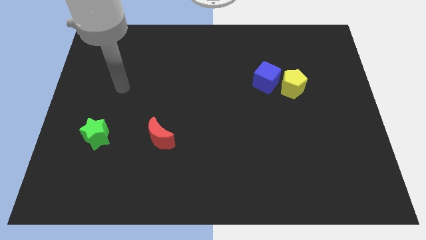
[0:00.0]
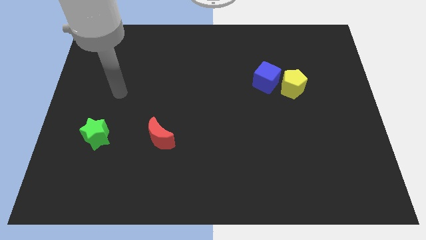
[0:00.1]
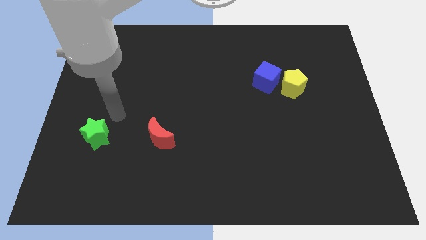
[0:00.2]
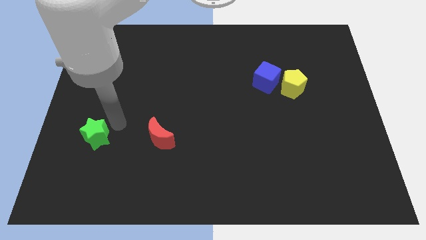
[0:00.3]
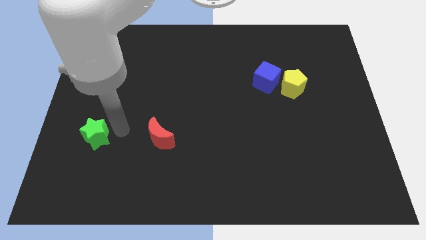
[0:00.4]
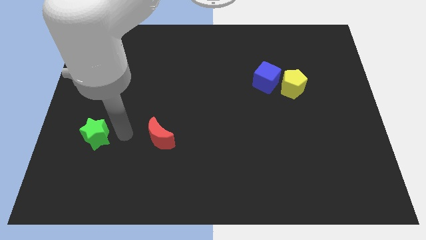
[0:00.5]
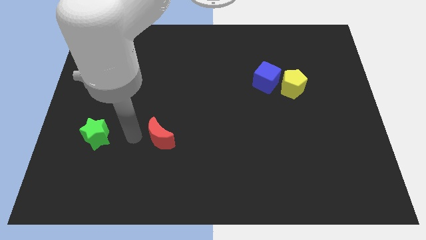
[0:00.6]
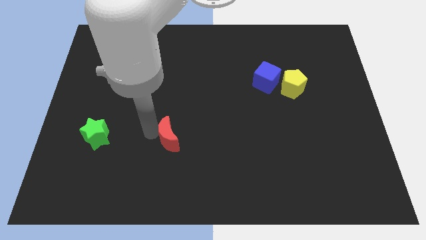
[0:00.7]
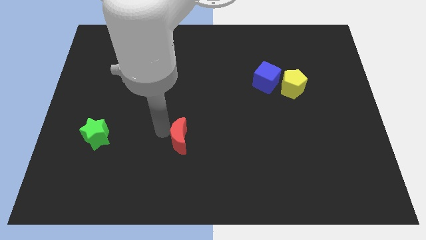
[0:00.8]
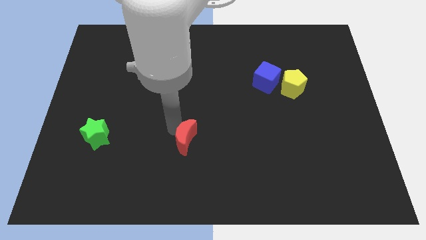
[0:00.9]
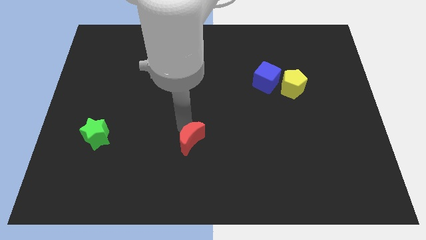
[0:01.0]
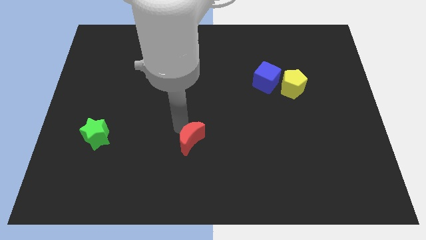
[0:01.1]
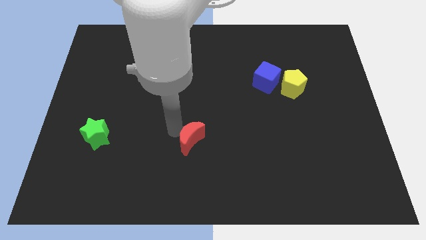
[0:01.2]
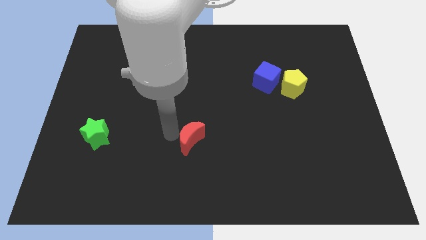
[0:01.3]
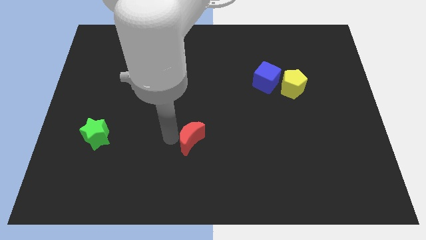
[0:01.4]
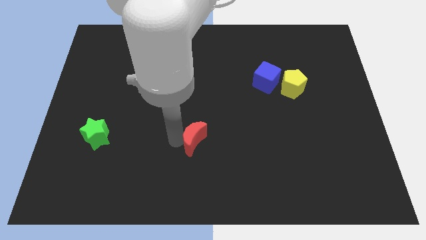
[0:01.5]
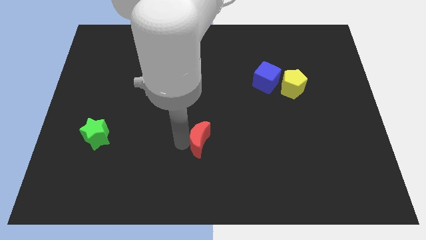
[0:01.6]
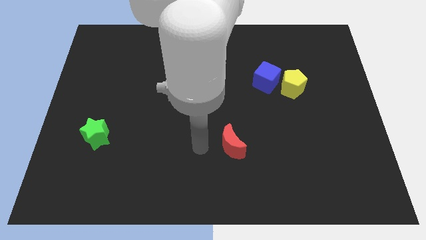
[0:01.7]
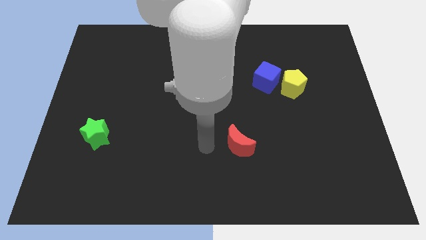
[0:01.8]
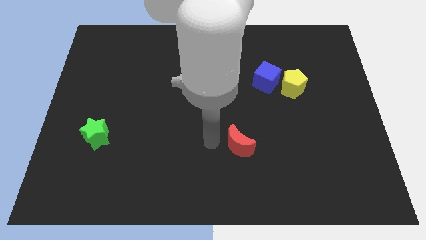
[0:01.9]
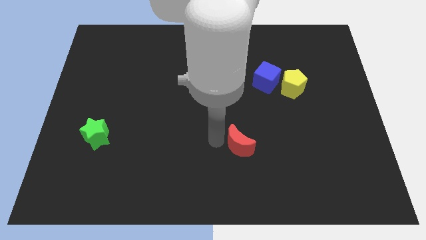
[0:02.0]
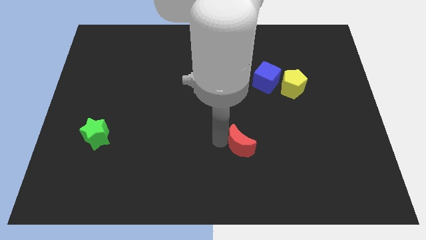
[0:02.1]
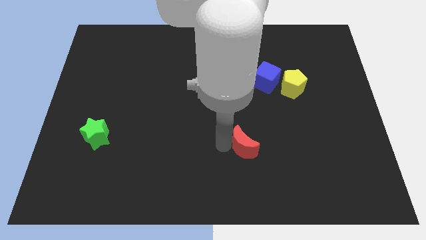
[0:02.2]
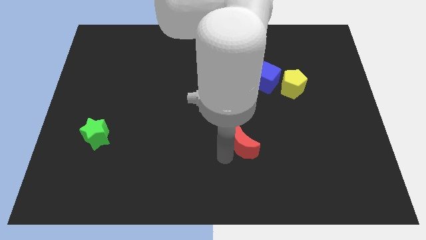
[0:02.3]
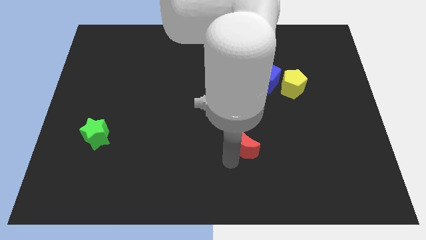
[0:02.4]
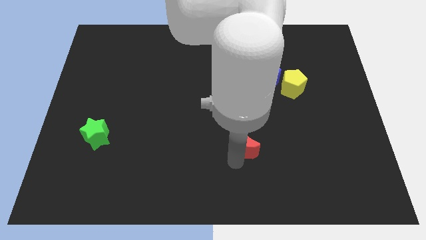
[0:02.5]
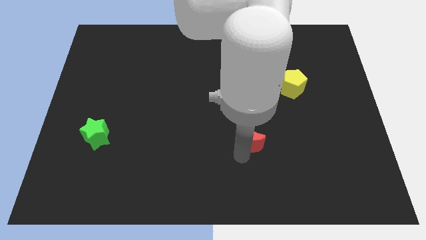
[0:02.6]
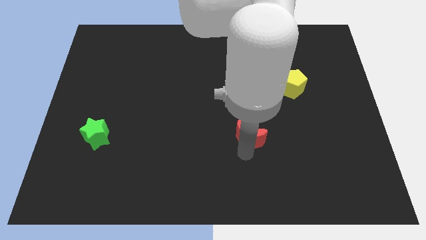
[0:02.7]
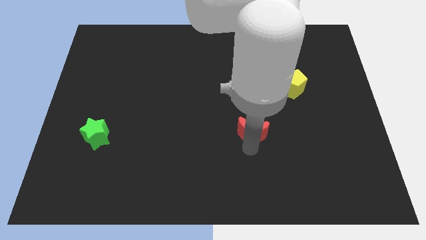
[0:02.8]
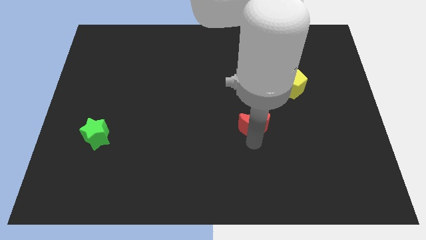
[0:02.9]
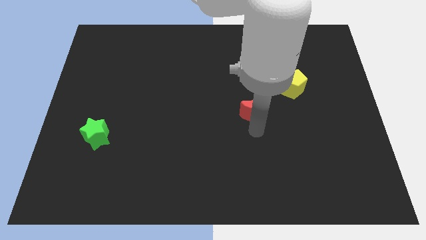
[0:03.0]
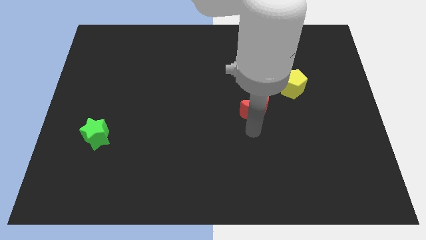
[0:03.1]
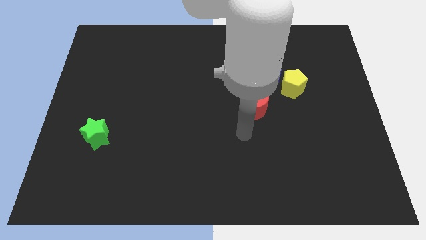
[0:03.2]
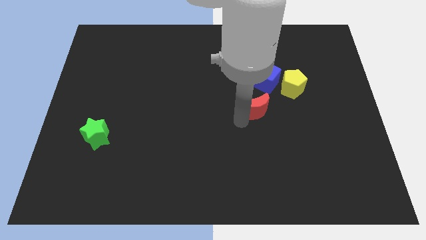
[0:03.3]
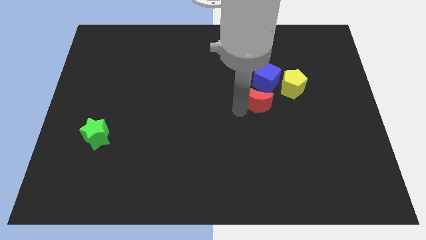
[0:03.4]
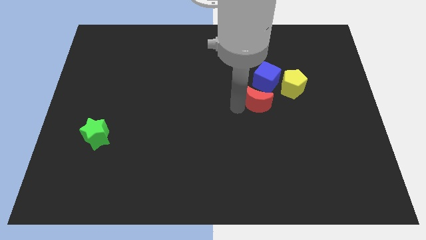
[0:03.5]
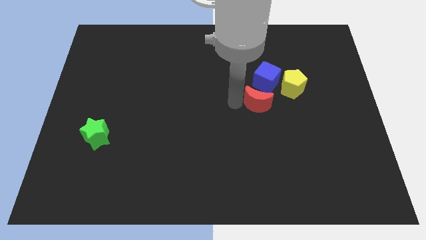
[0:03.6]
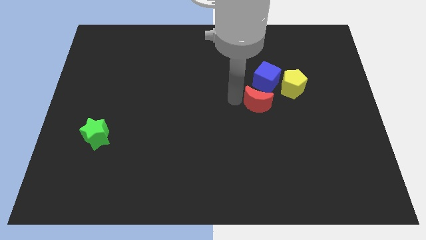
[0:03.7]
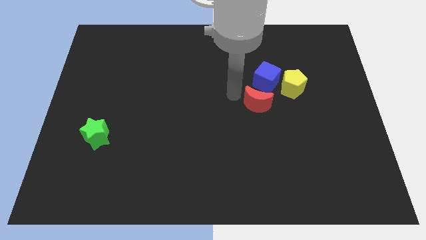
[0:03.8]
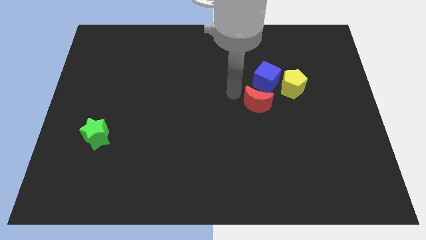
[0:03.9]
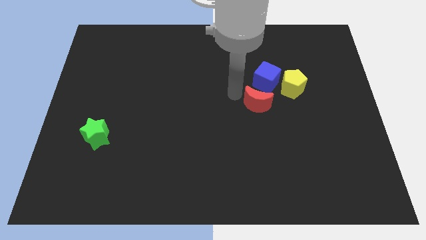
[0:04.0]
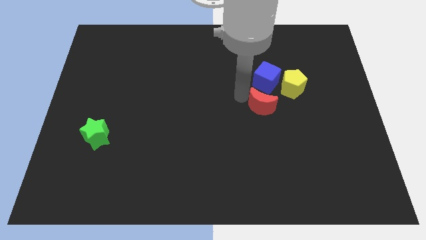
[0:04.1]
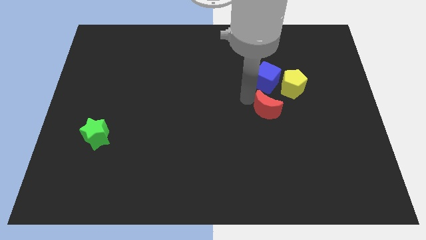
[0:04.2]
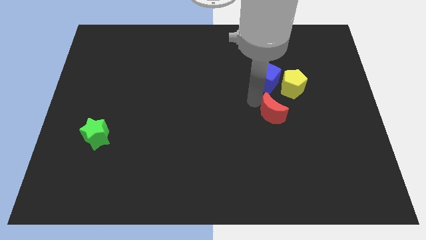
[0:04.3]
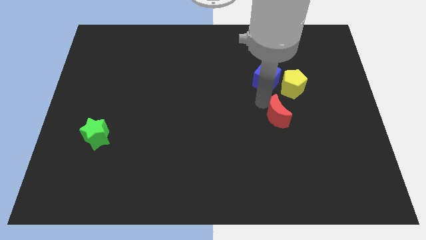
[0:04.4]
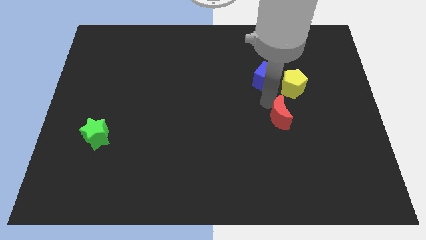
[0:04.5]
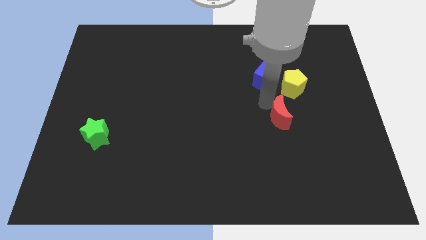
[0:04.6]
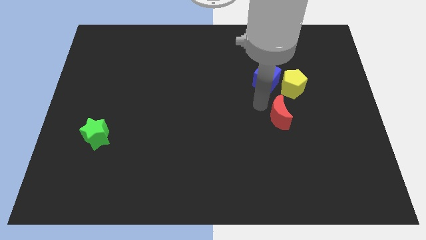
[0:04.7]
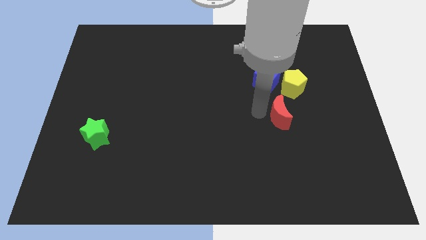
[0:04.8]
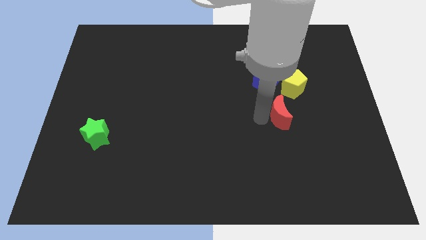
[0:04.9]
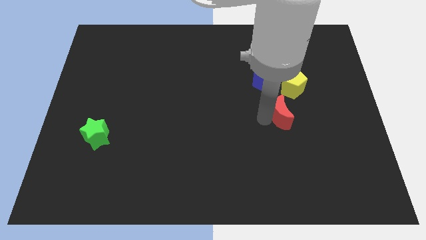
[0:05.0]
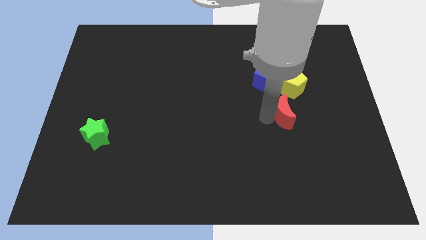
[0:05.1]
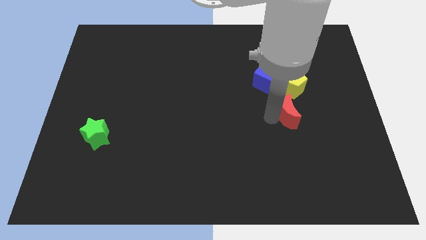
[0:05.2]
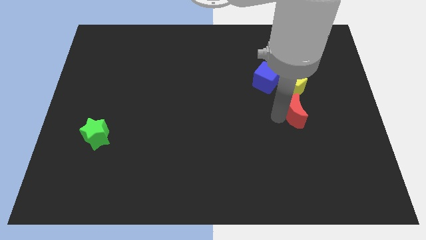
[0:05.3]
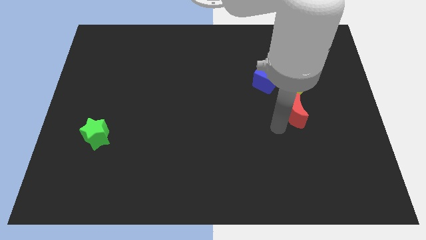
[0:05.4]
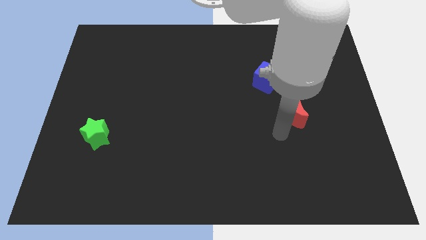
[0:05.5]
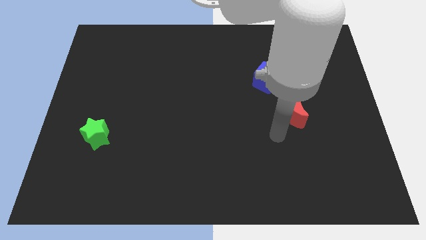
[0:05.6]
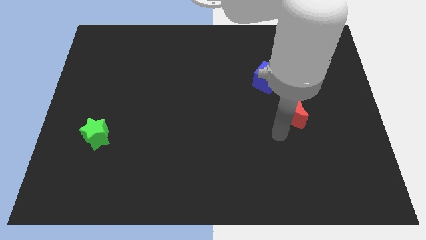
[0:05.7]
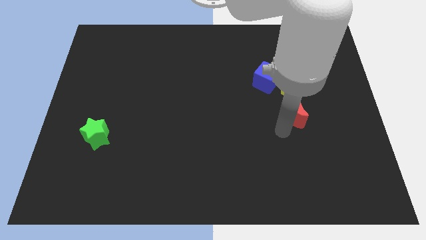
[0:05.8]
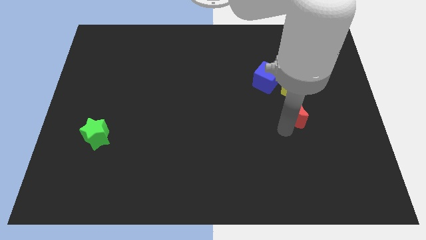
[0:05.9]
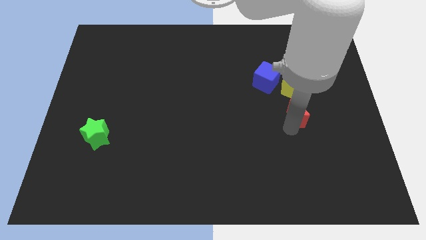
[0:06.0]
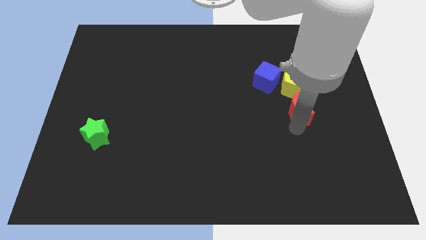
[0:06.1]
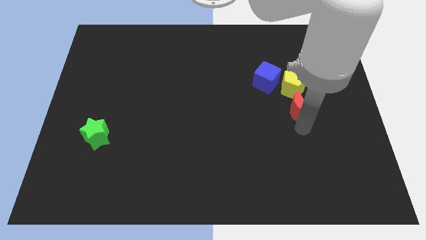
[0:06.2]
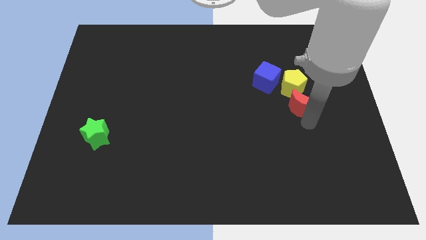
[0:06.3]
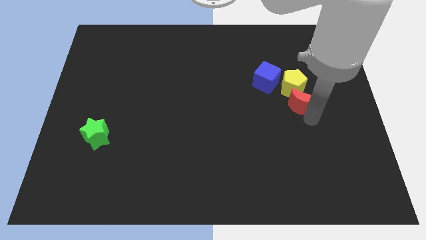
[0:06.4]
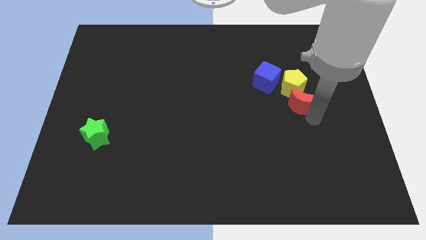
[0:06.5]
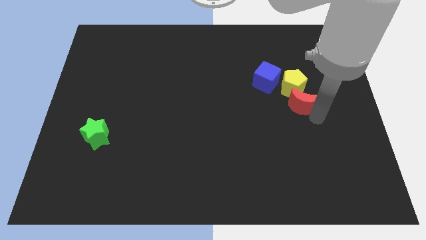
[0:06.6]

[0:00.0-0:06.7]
move the moon to the pentagon

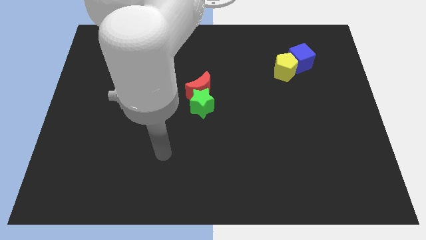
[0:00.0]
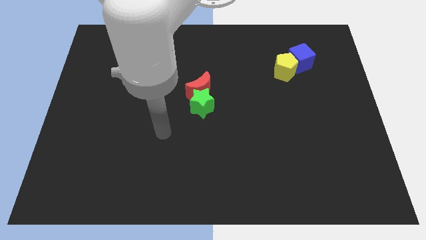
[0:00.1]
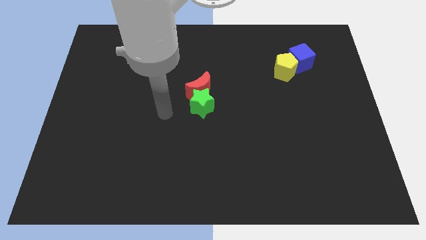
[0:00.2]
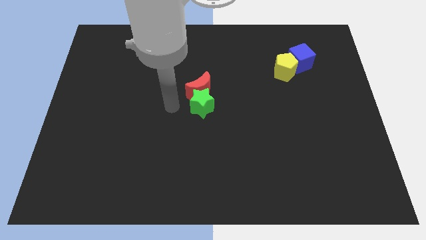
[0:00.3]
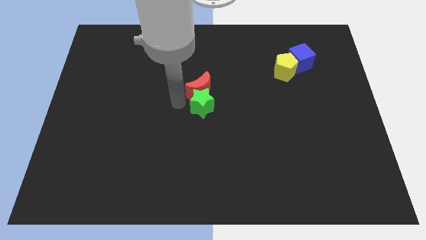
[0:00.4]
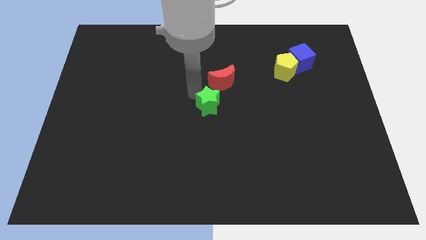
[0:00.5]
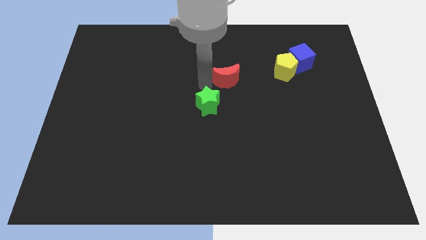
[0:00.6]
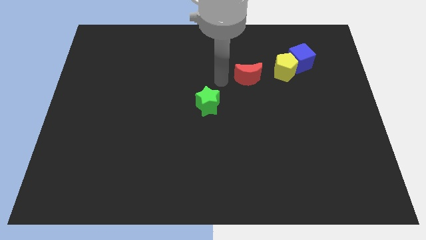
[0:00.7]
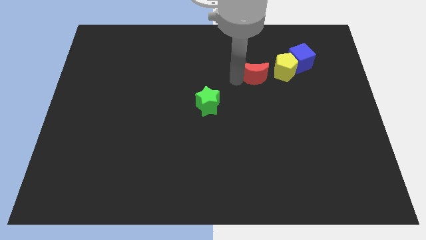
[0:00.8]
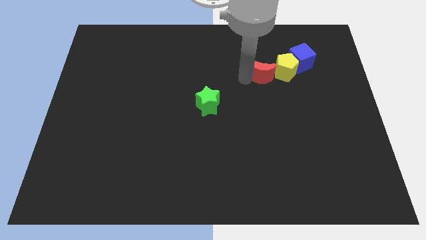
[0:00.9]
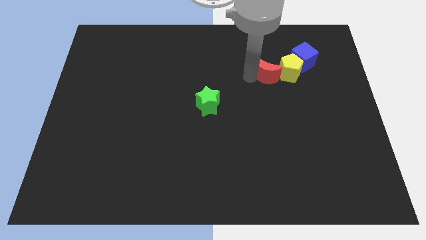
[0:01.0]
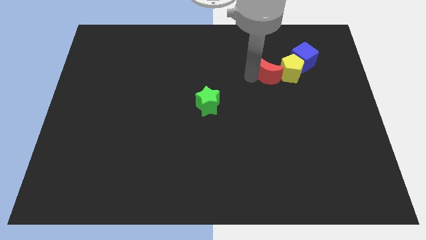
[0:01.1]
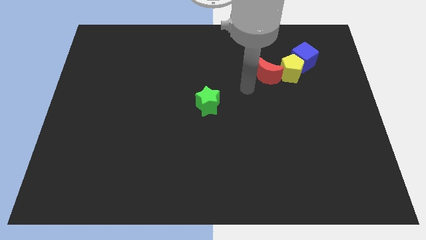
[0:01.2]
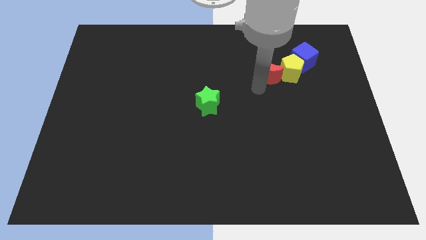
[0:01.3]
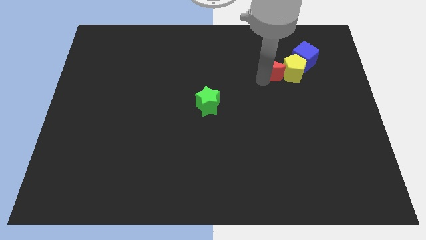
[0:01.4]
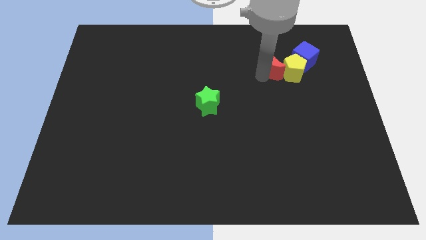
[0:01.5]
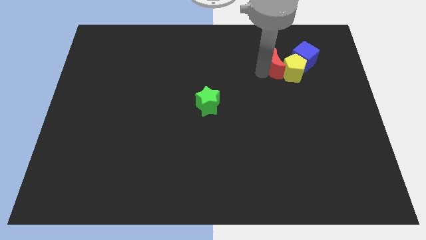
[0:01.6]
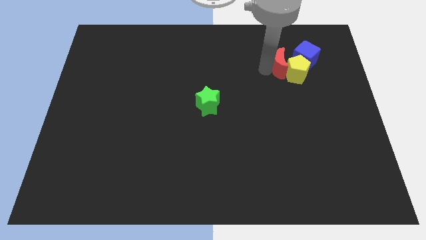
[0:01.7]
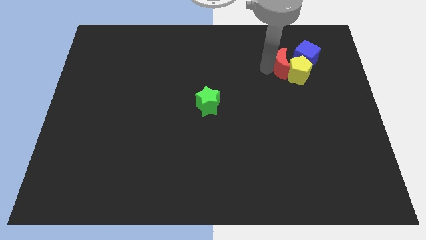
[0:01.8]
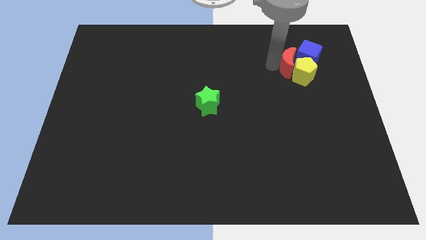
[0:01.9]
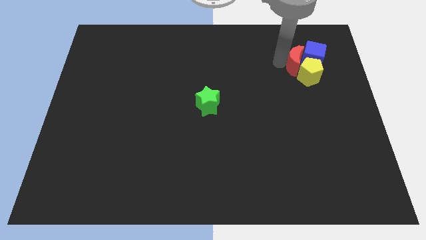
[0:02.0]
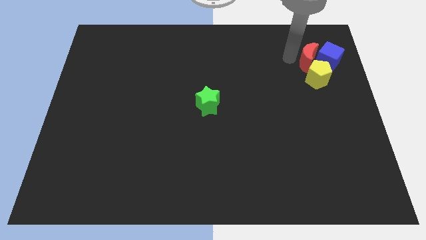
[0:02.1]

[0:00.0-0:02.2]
push the red moon to the blue block
